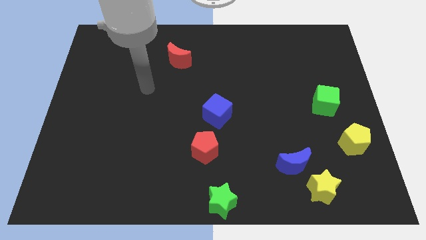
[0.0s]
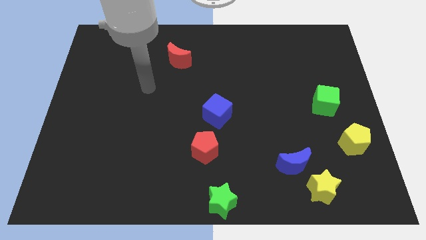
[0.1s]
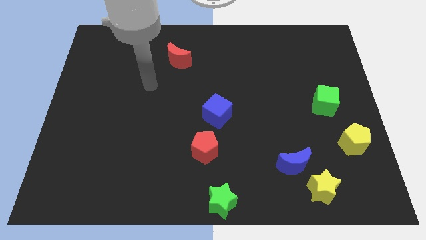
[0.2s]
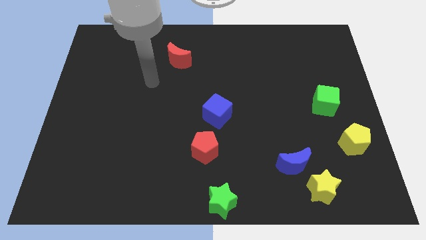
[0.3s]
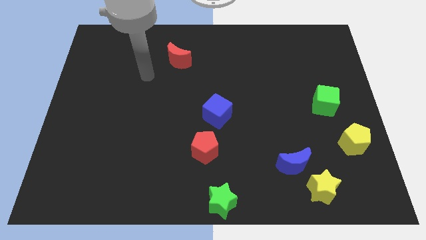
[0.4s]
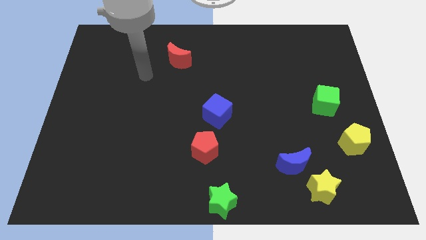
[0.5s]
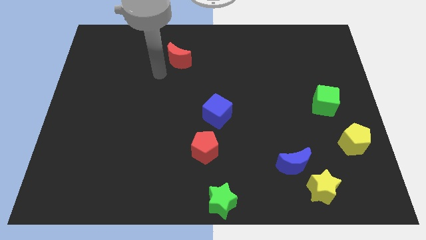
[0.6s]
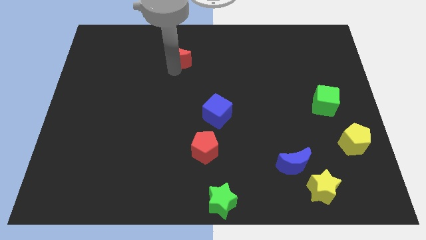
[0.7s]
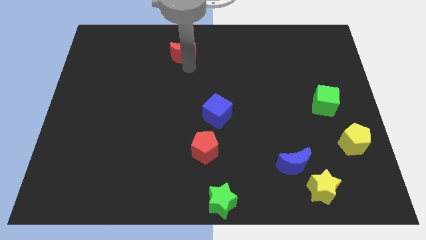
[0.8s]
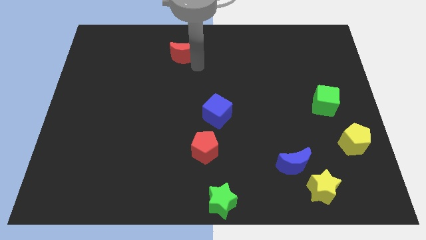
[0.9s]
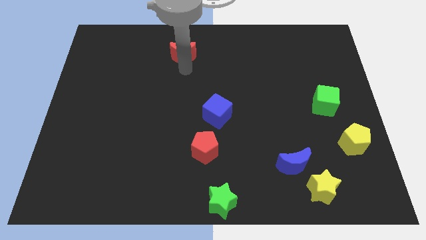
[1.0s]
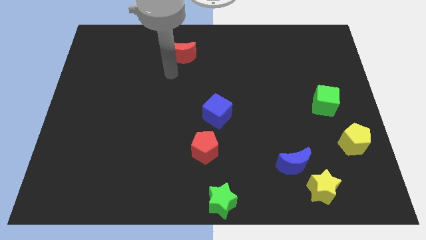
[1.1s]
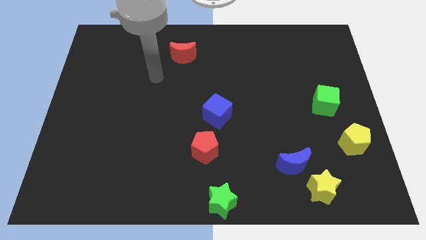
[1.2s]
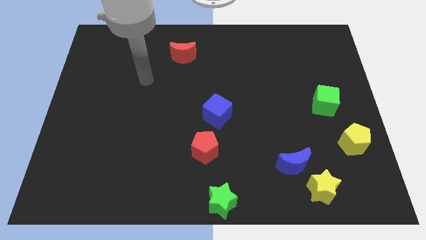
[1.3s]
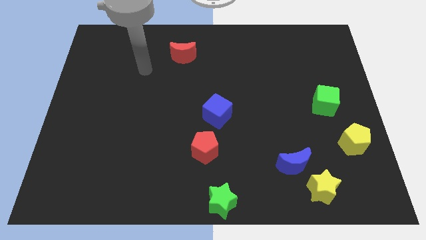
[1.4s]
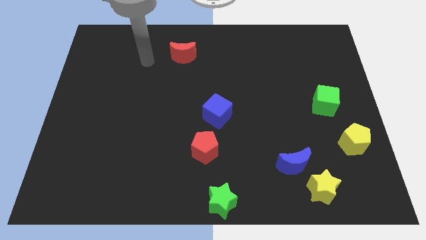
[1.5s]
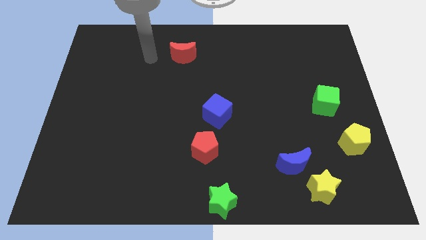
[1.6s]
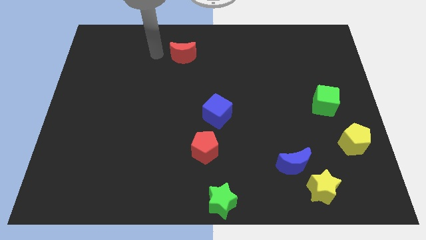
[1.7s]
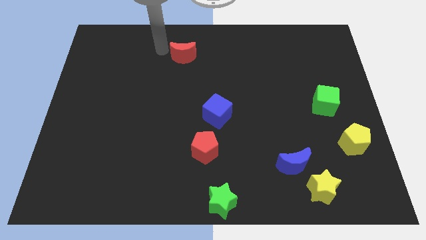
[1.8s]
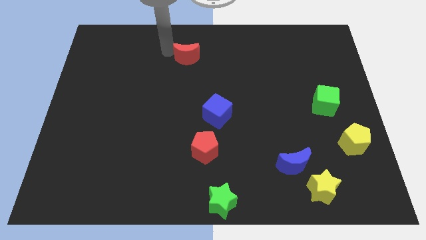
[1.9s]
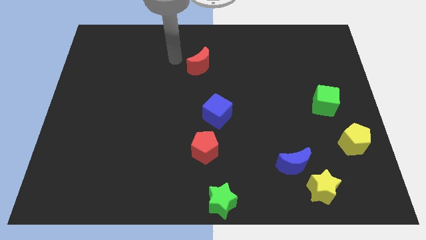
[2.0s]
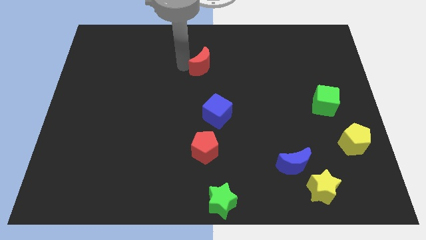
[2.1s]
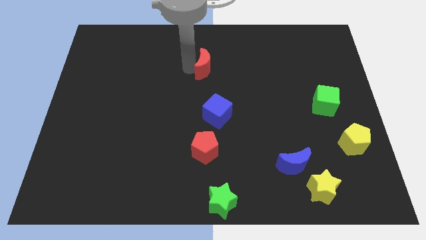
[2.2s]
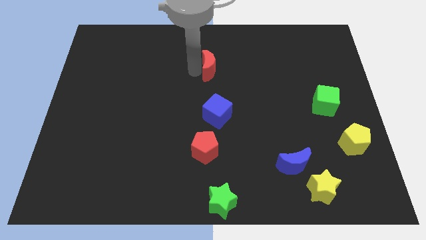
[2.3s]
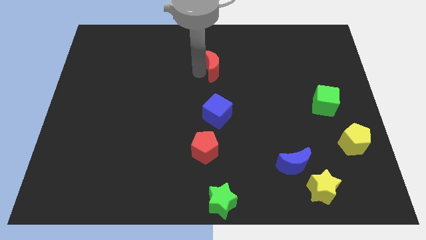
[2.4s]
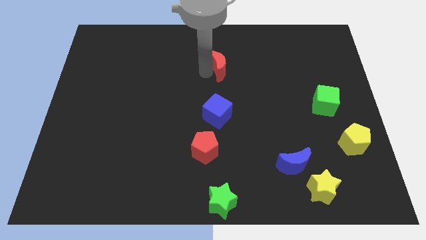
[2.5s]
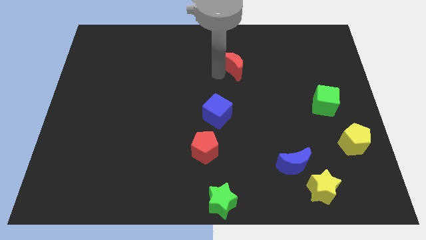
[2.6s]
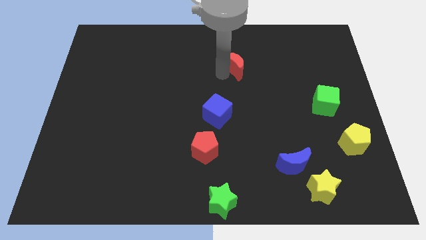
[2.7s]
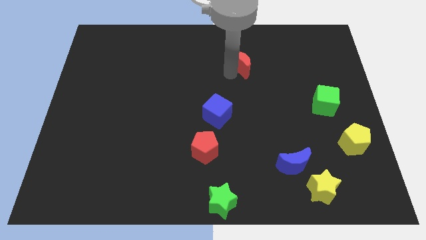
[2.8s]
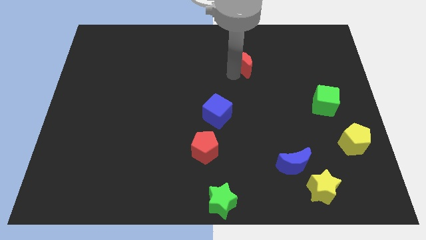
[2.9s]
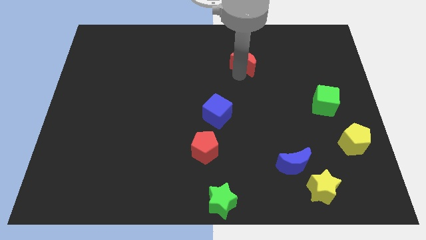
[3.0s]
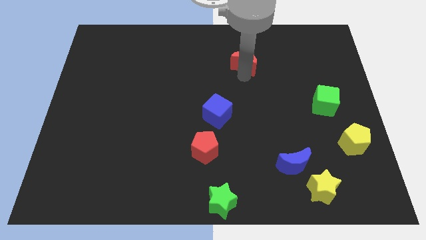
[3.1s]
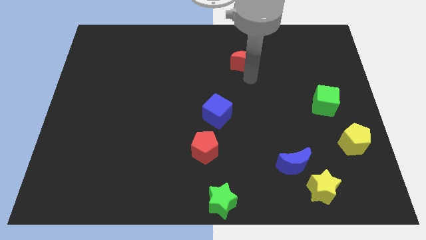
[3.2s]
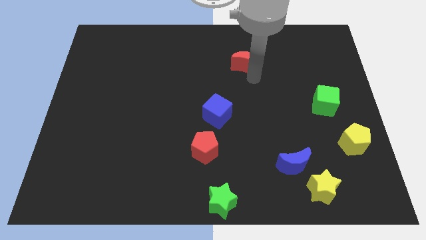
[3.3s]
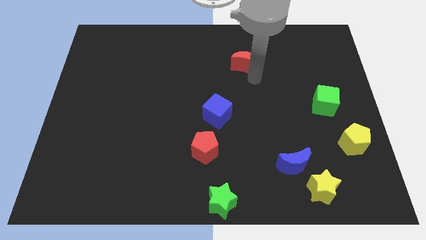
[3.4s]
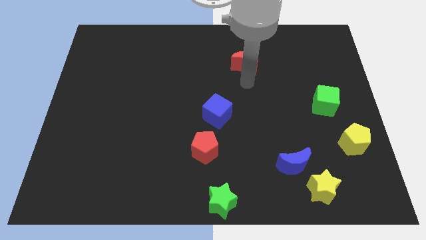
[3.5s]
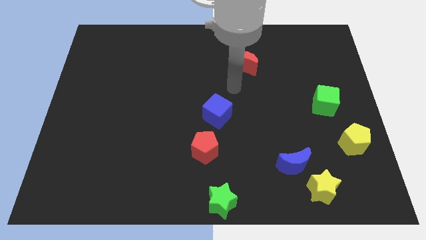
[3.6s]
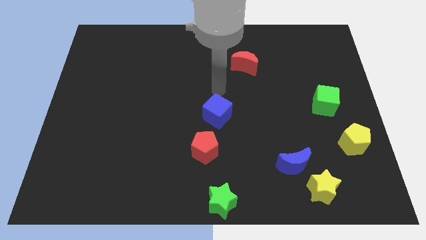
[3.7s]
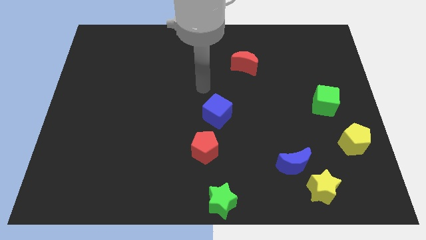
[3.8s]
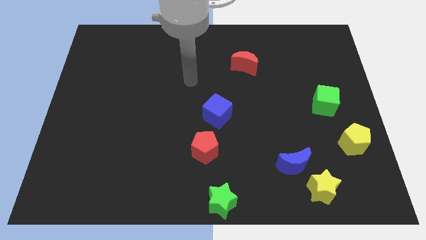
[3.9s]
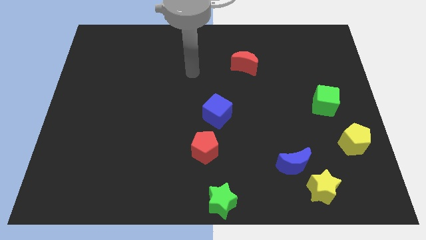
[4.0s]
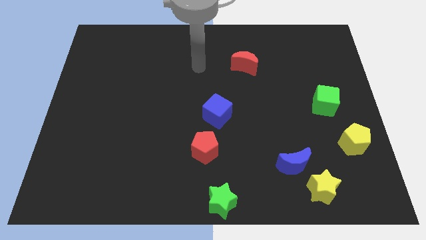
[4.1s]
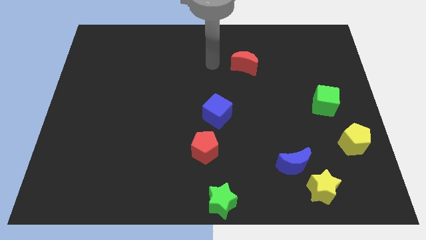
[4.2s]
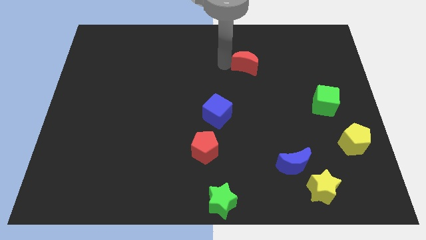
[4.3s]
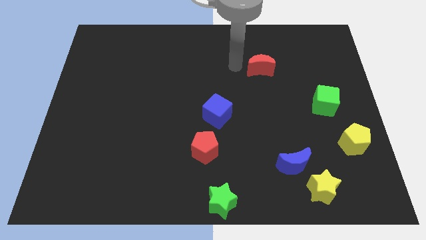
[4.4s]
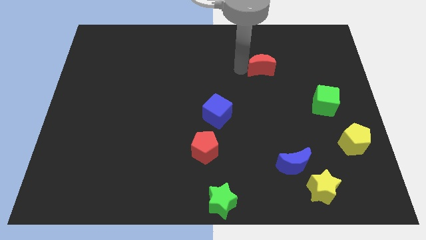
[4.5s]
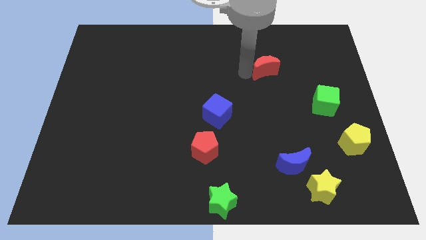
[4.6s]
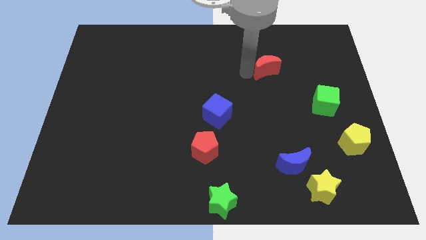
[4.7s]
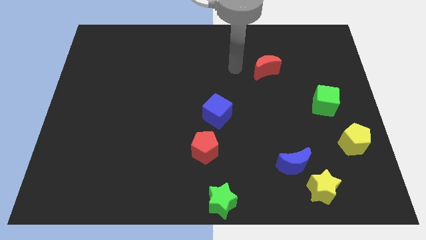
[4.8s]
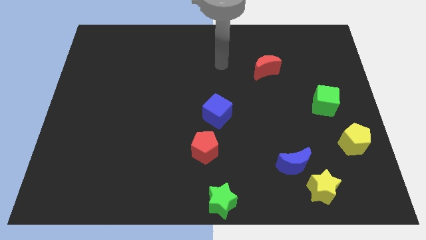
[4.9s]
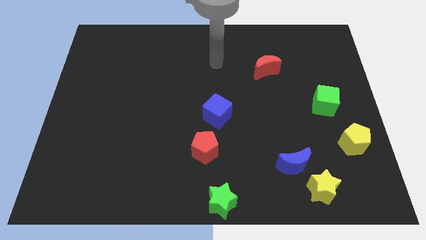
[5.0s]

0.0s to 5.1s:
push the red crescent to the right

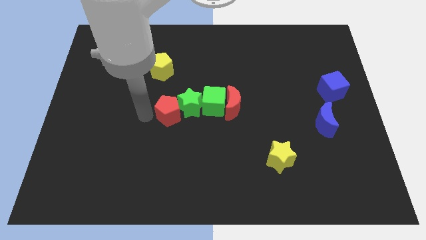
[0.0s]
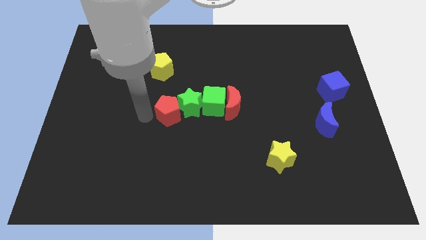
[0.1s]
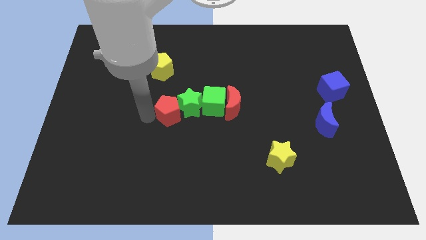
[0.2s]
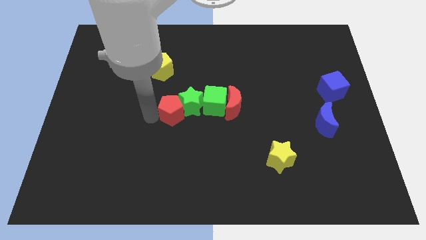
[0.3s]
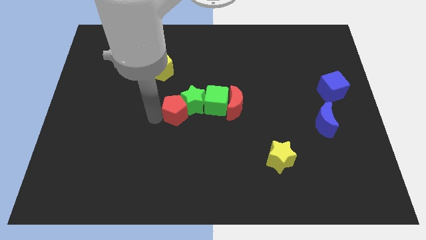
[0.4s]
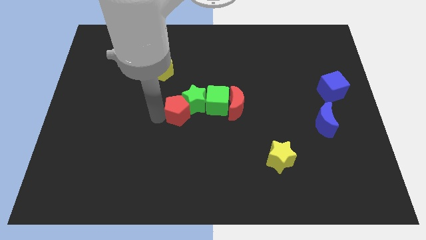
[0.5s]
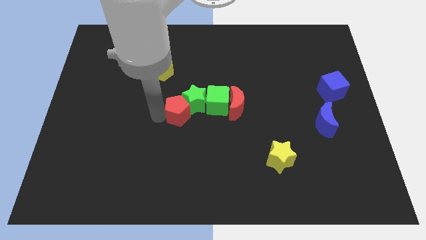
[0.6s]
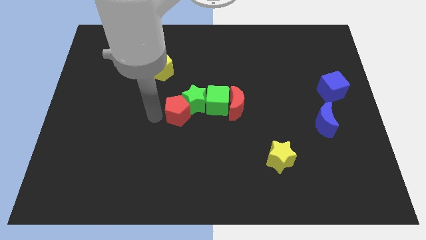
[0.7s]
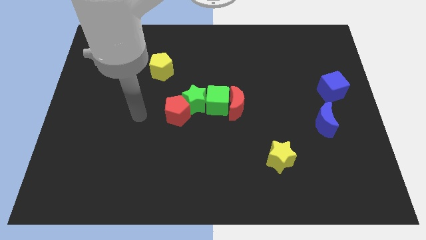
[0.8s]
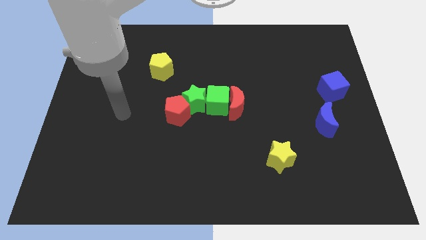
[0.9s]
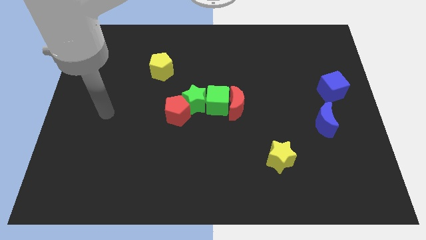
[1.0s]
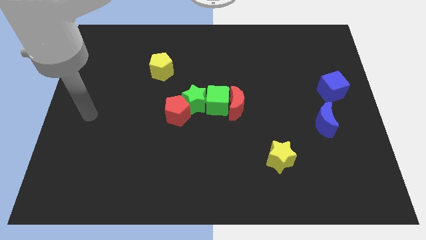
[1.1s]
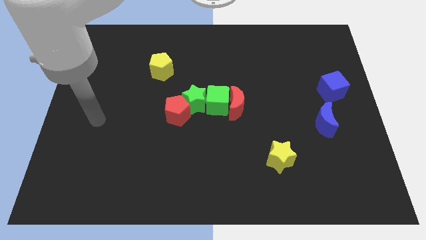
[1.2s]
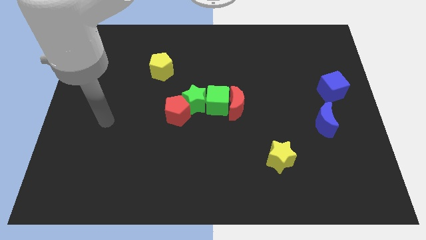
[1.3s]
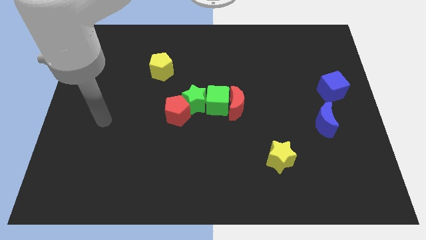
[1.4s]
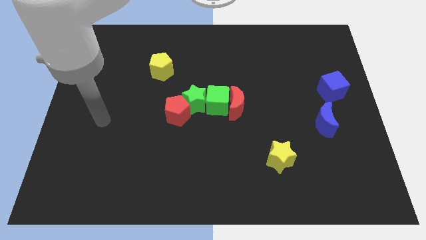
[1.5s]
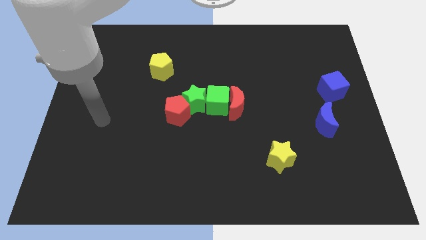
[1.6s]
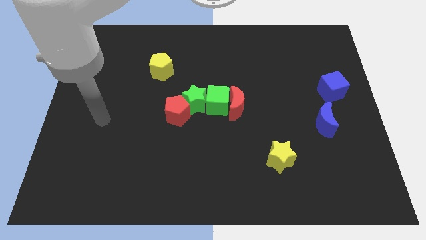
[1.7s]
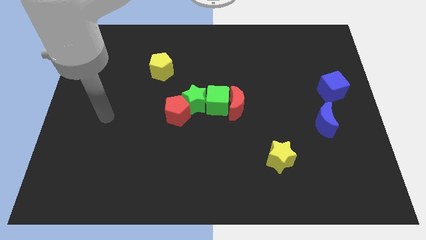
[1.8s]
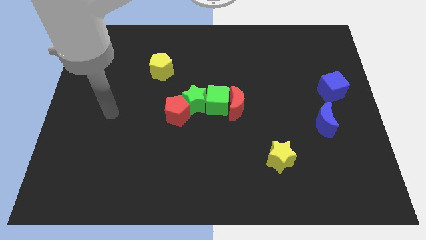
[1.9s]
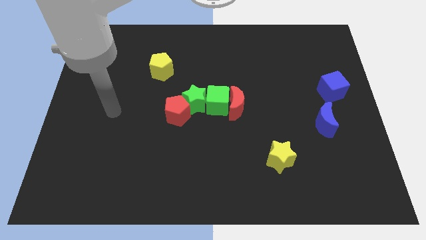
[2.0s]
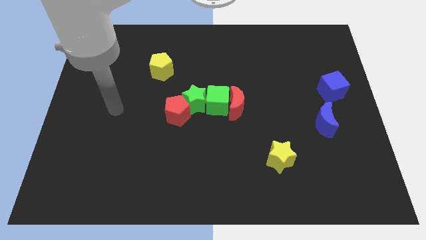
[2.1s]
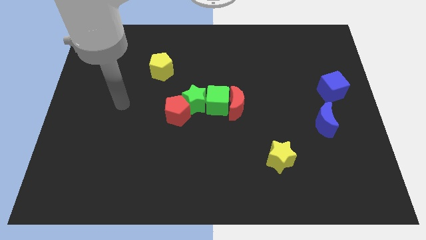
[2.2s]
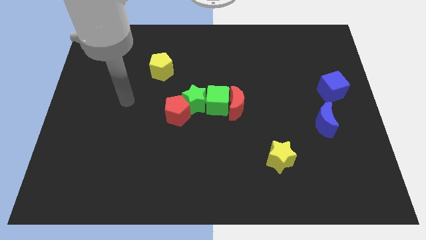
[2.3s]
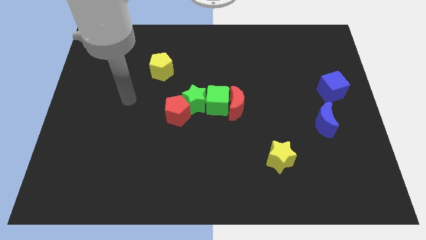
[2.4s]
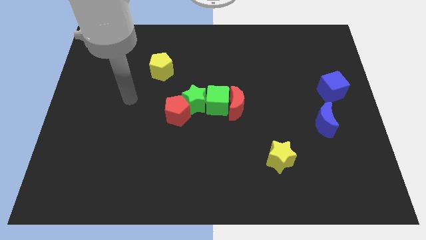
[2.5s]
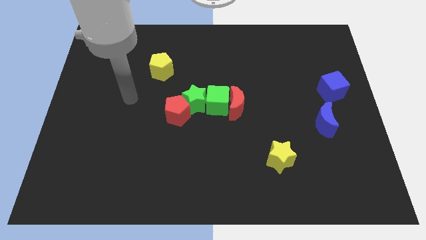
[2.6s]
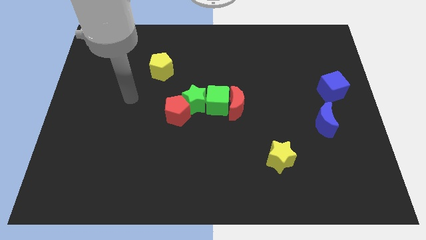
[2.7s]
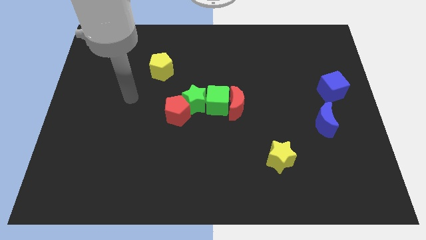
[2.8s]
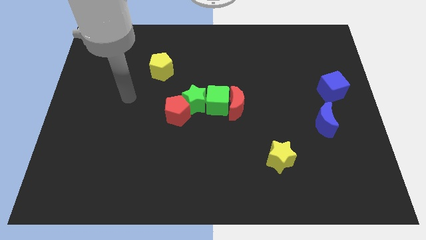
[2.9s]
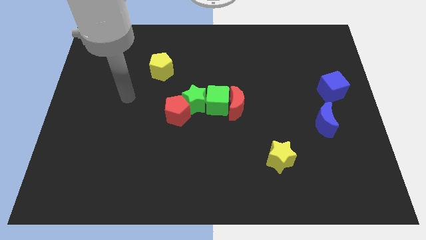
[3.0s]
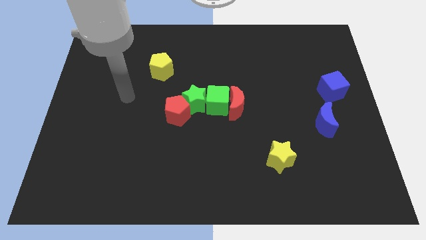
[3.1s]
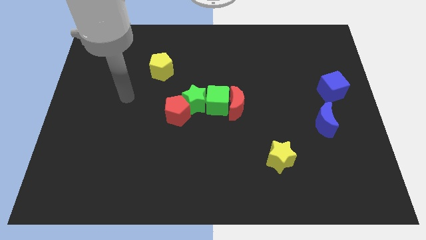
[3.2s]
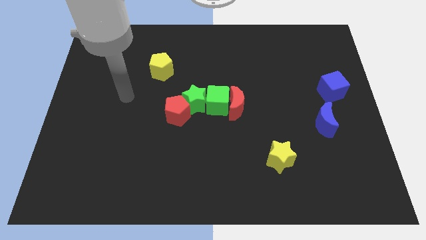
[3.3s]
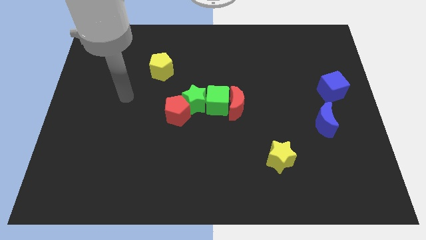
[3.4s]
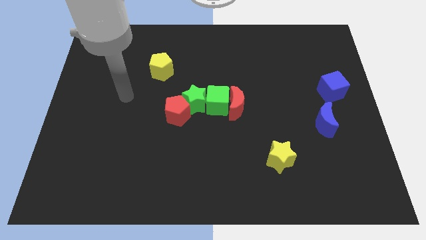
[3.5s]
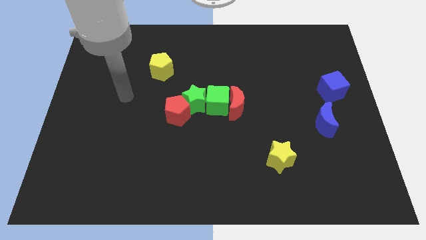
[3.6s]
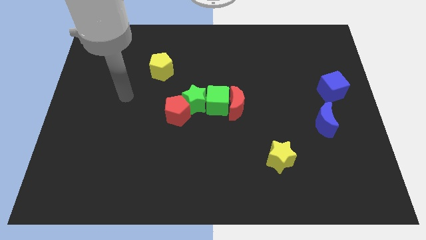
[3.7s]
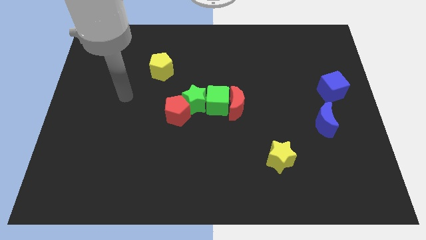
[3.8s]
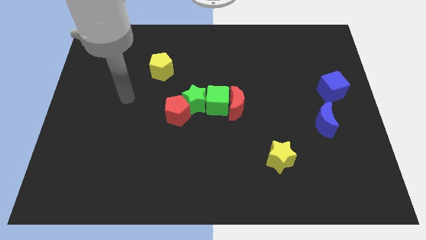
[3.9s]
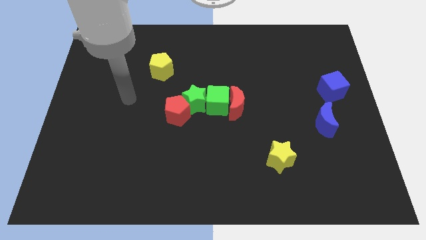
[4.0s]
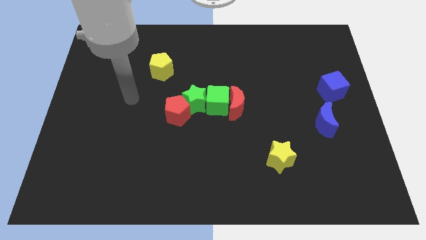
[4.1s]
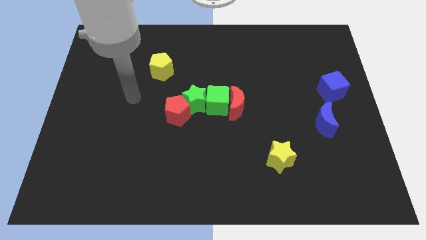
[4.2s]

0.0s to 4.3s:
adjust the group of blocks at the center
